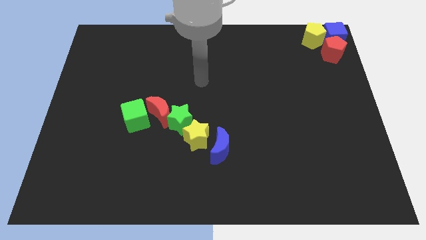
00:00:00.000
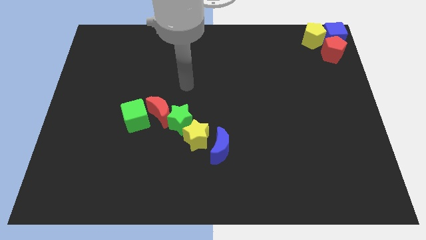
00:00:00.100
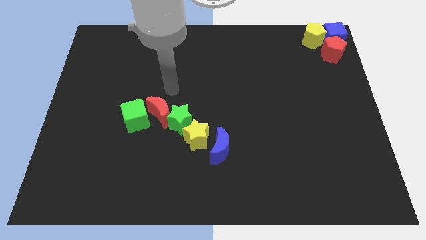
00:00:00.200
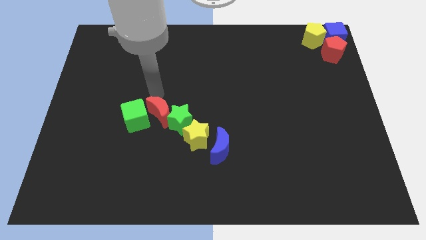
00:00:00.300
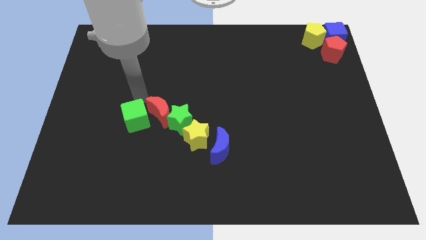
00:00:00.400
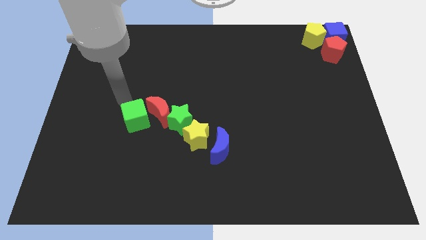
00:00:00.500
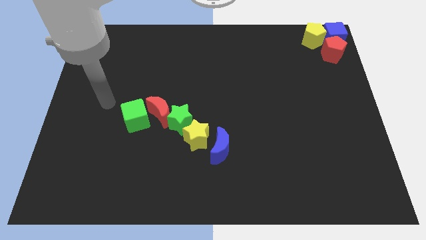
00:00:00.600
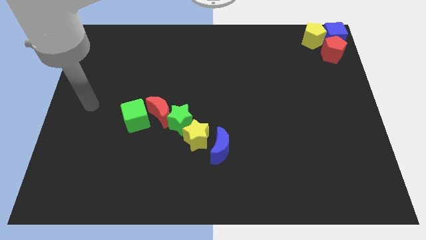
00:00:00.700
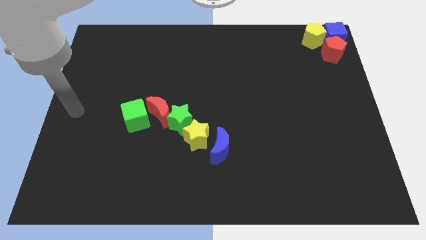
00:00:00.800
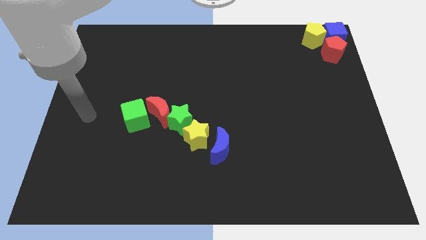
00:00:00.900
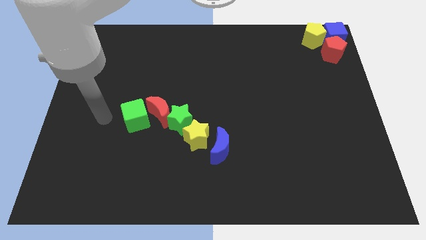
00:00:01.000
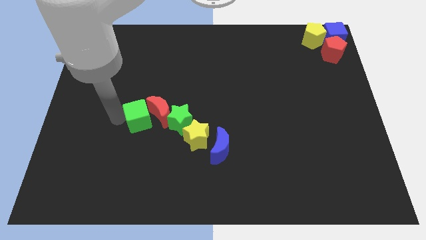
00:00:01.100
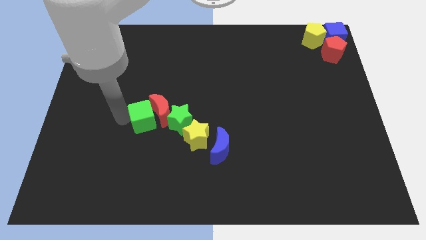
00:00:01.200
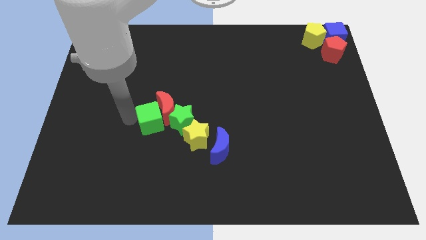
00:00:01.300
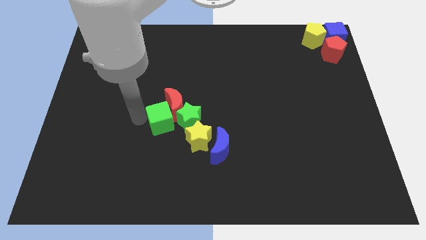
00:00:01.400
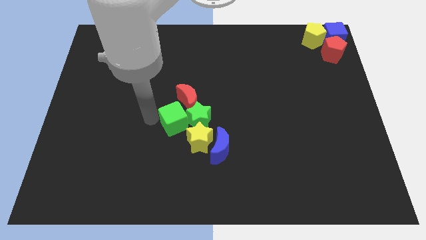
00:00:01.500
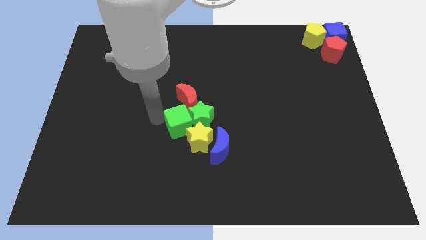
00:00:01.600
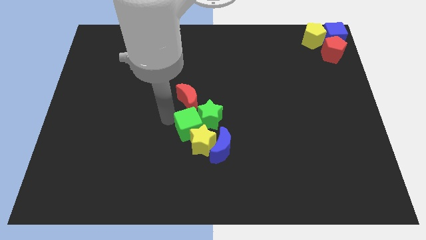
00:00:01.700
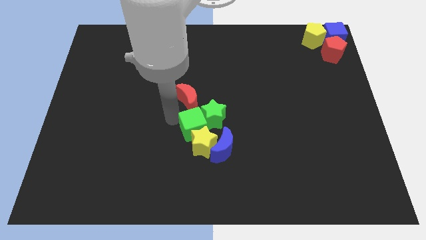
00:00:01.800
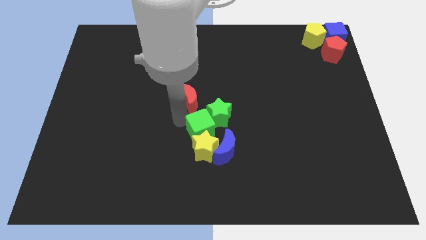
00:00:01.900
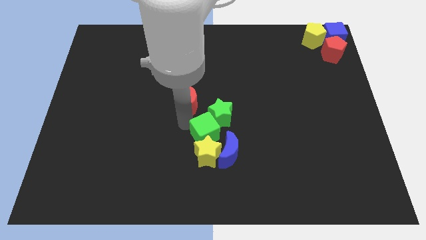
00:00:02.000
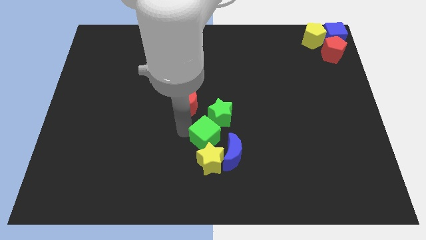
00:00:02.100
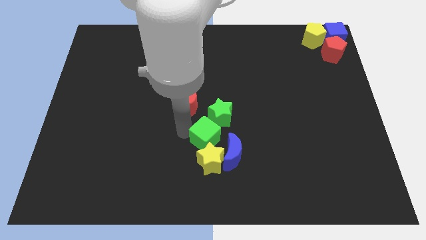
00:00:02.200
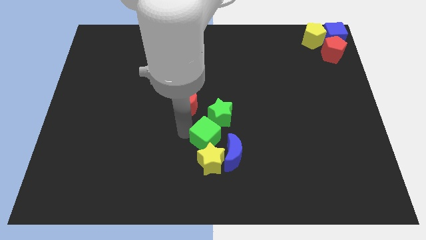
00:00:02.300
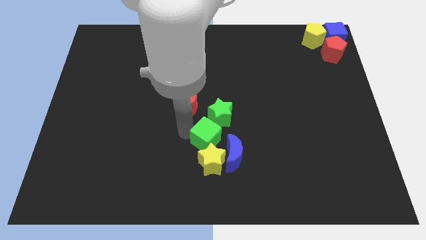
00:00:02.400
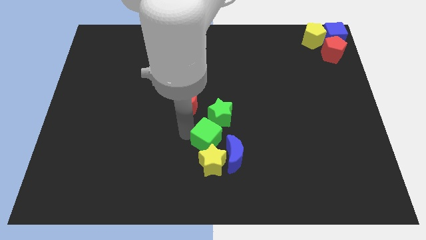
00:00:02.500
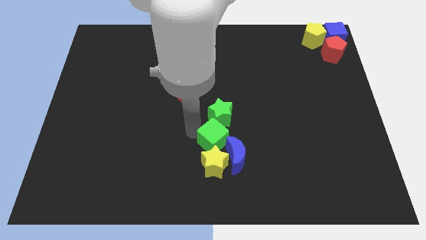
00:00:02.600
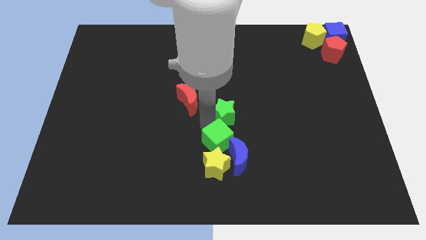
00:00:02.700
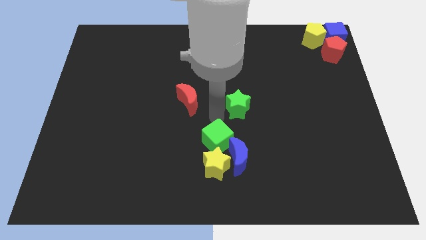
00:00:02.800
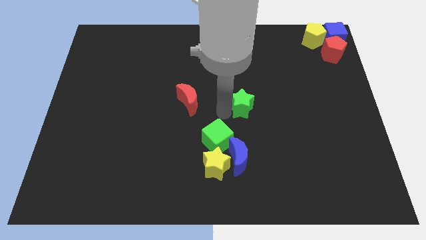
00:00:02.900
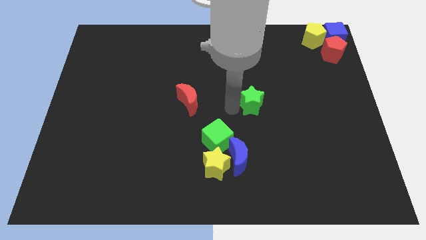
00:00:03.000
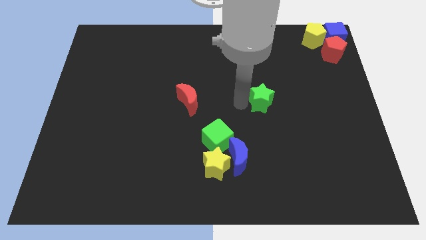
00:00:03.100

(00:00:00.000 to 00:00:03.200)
separate the green star from the group of blocks

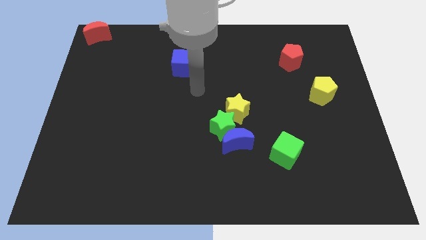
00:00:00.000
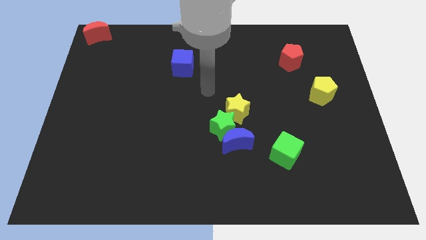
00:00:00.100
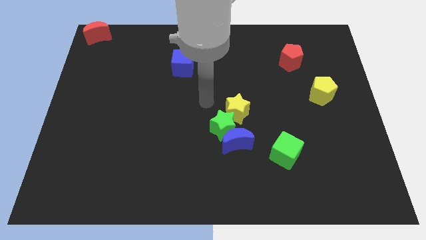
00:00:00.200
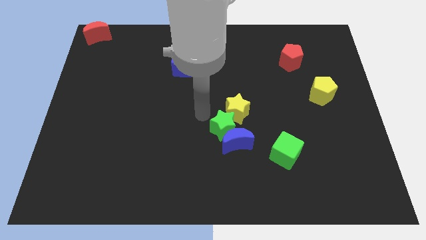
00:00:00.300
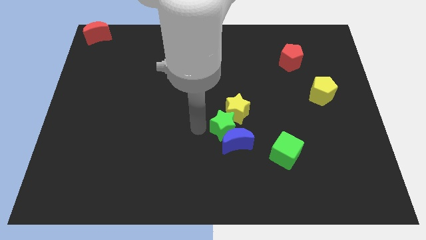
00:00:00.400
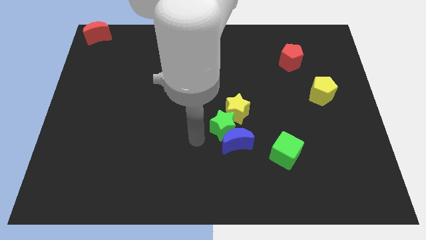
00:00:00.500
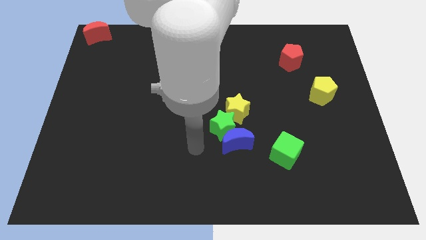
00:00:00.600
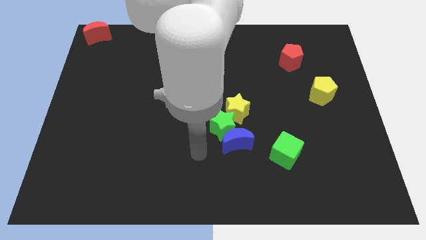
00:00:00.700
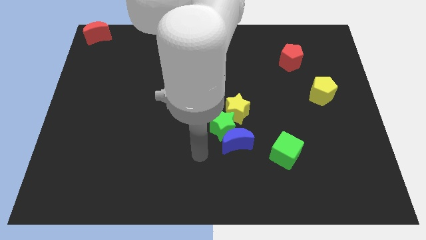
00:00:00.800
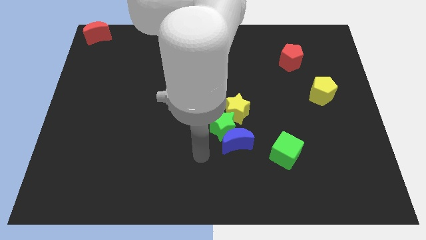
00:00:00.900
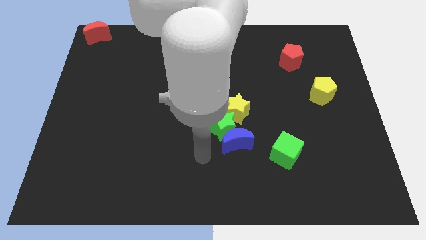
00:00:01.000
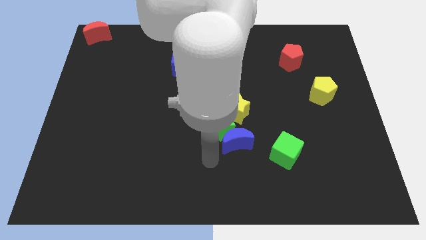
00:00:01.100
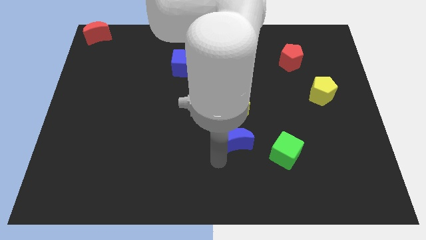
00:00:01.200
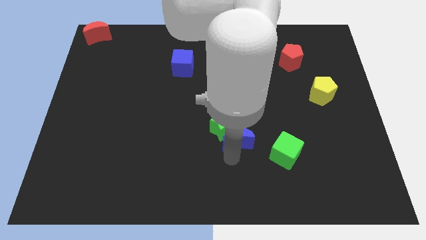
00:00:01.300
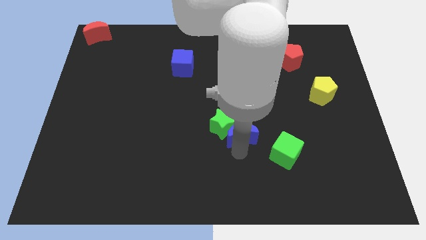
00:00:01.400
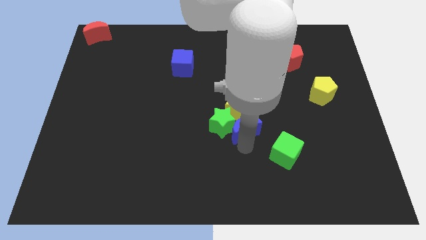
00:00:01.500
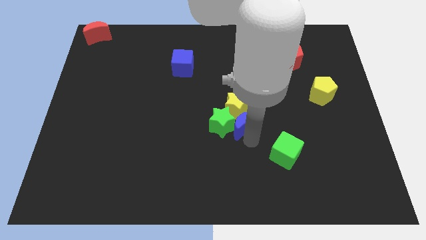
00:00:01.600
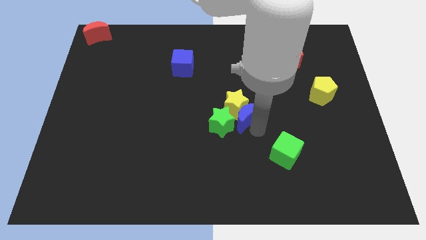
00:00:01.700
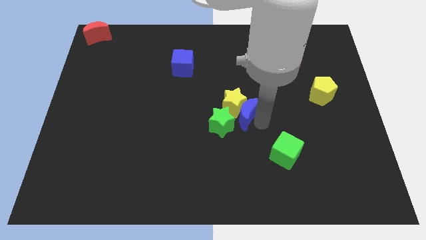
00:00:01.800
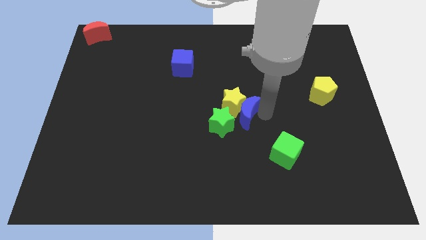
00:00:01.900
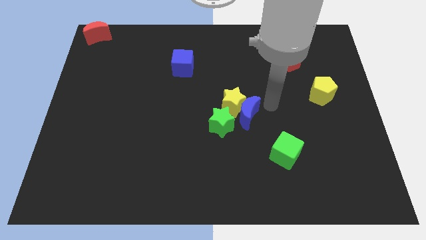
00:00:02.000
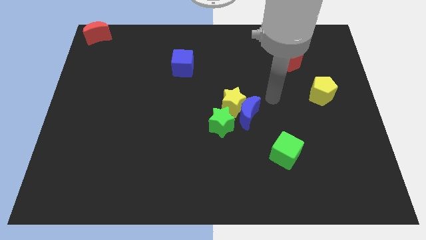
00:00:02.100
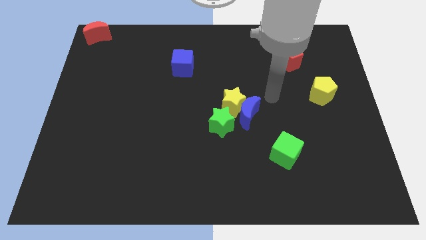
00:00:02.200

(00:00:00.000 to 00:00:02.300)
push the blue moon to the right of green and yellow star

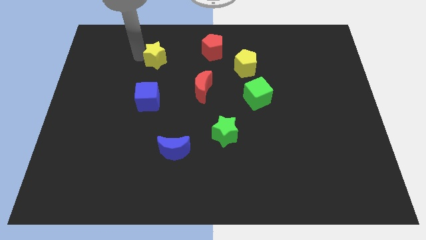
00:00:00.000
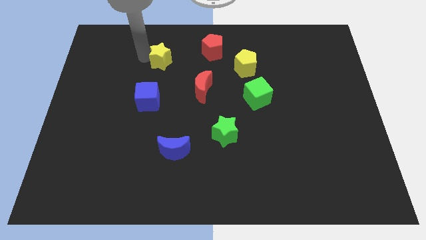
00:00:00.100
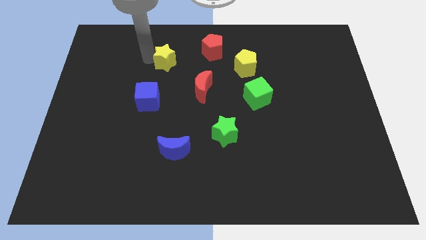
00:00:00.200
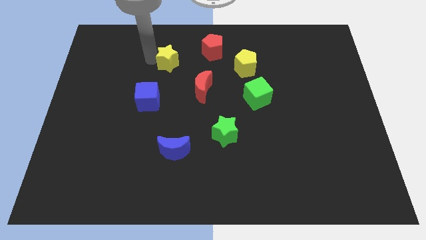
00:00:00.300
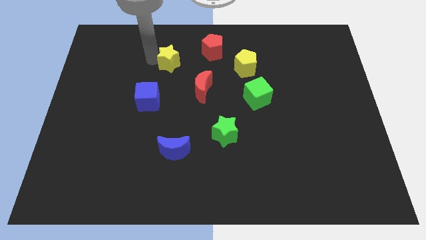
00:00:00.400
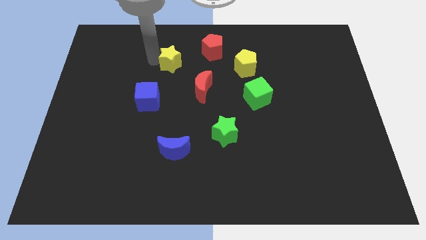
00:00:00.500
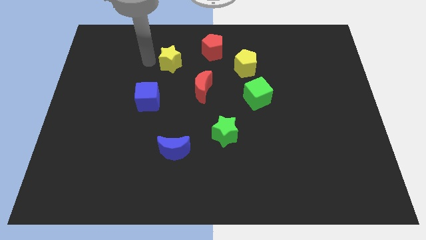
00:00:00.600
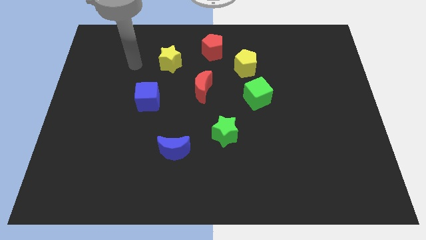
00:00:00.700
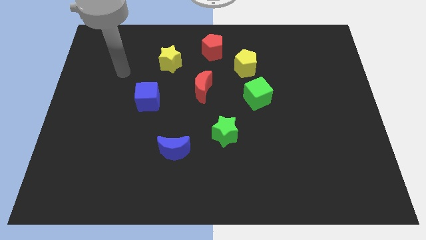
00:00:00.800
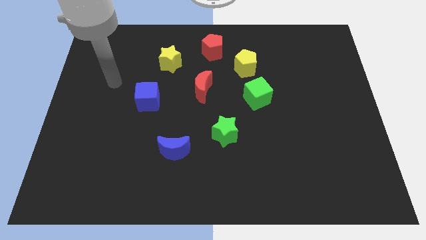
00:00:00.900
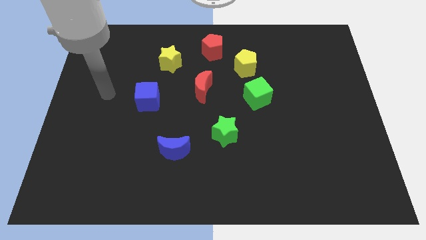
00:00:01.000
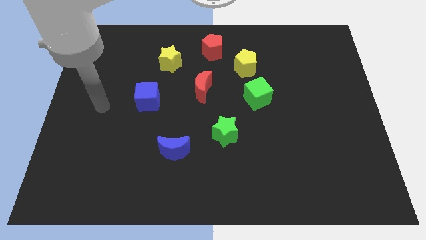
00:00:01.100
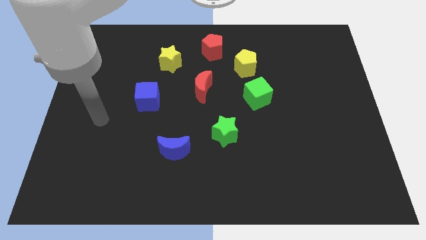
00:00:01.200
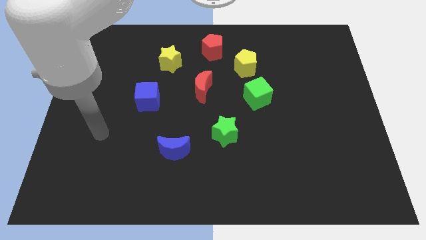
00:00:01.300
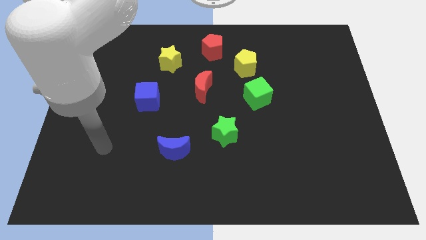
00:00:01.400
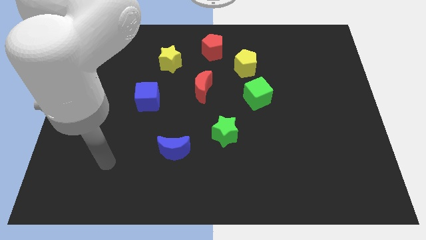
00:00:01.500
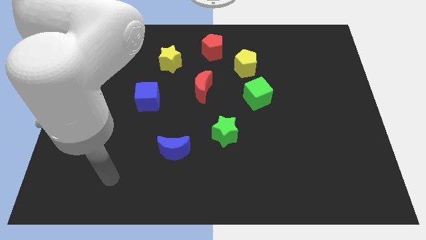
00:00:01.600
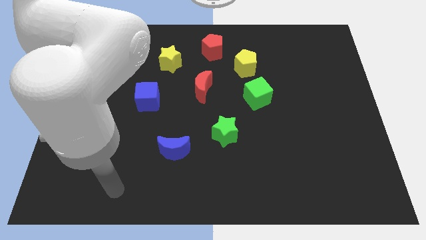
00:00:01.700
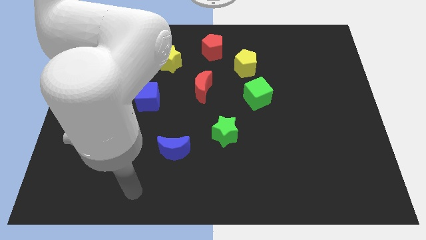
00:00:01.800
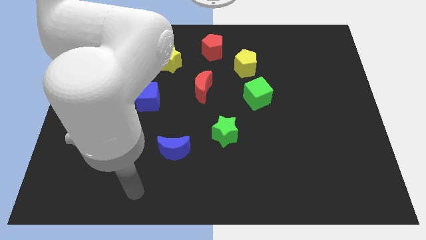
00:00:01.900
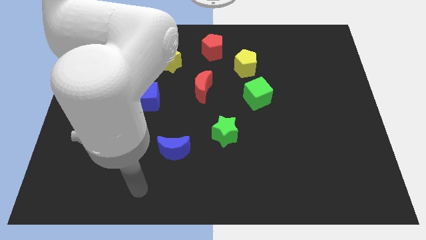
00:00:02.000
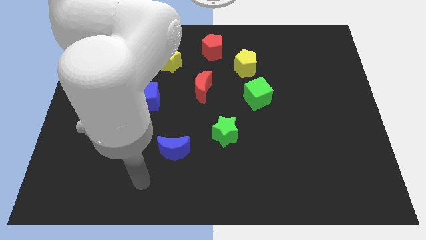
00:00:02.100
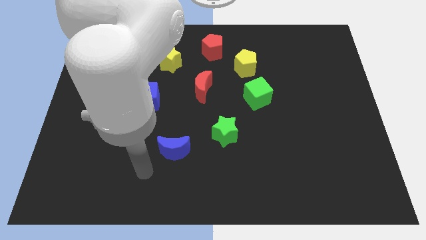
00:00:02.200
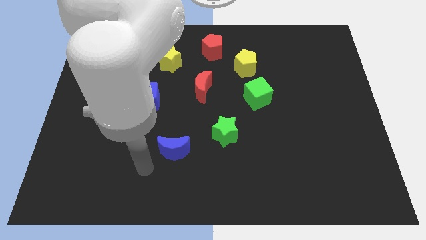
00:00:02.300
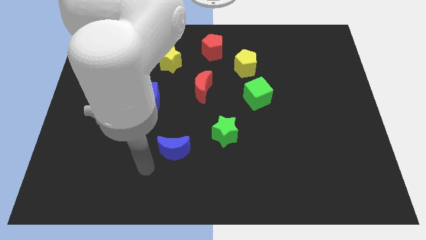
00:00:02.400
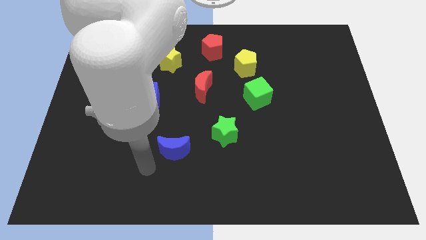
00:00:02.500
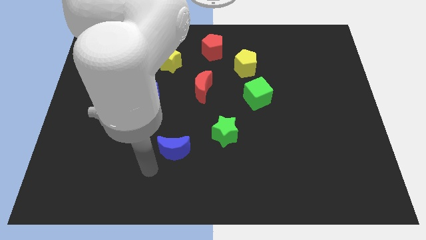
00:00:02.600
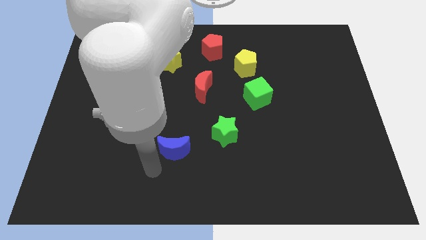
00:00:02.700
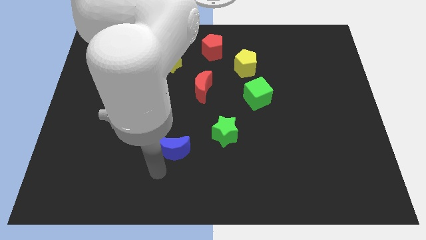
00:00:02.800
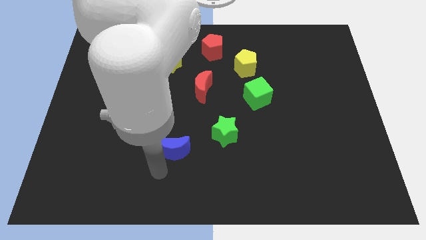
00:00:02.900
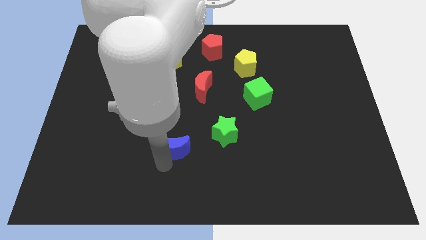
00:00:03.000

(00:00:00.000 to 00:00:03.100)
move the pointer at the bottom of the blue moon

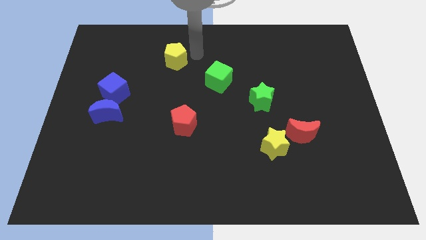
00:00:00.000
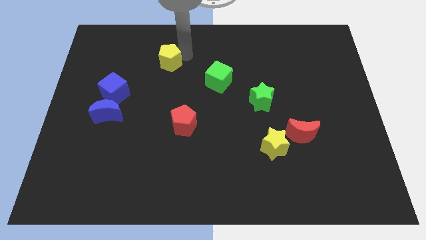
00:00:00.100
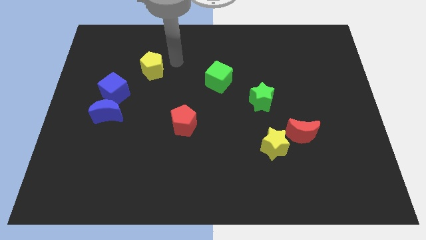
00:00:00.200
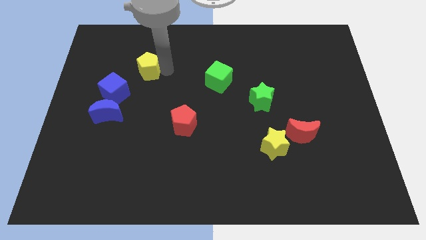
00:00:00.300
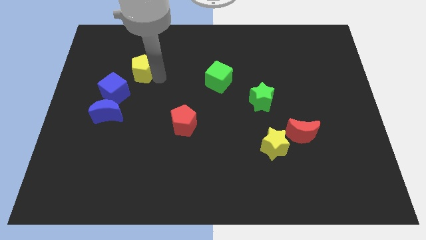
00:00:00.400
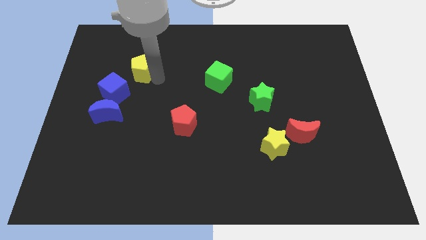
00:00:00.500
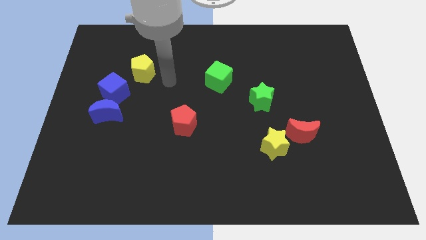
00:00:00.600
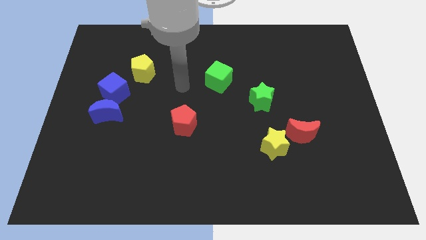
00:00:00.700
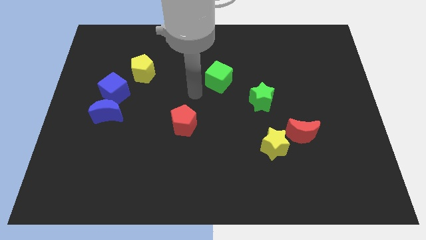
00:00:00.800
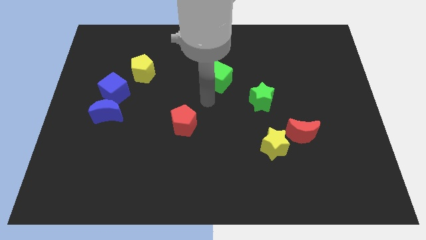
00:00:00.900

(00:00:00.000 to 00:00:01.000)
push yellow pentagon towards blue cube
